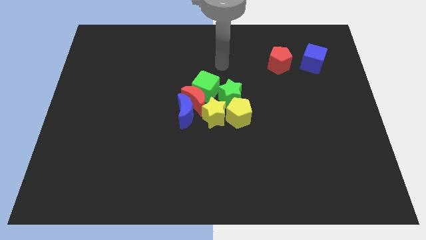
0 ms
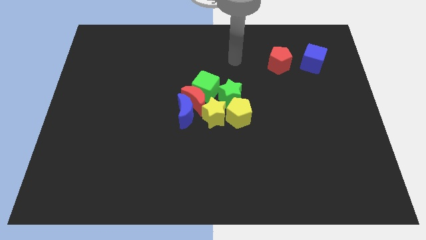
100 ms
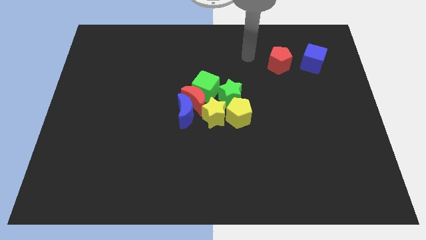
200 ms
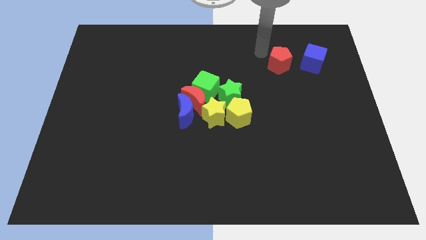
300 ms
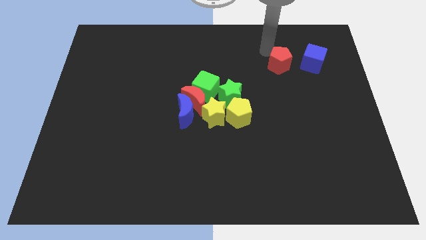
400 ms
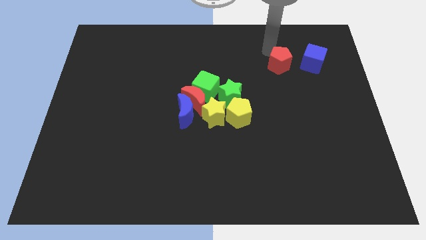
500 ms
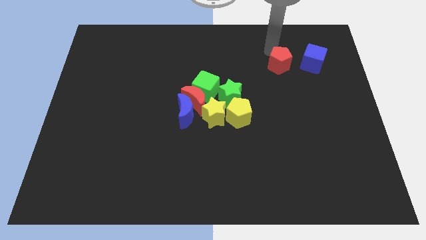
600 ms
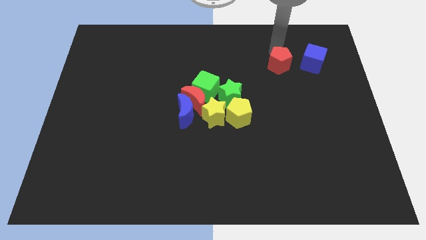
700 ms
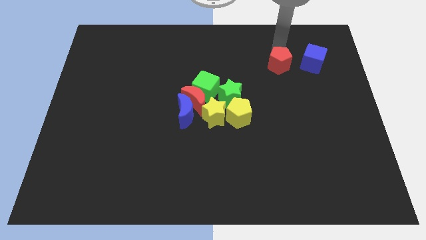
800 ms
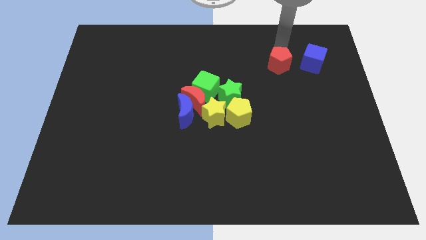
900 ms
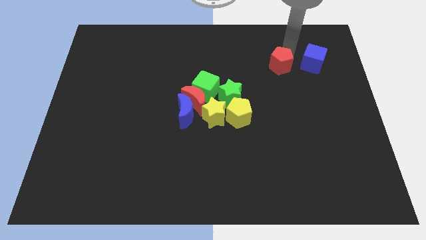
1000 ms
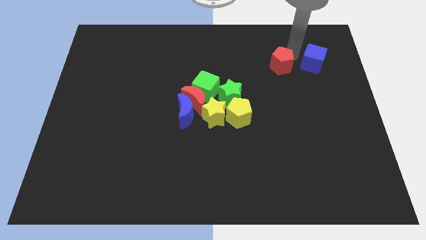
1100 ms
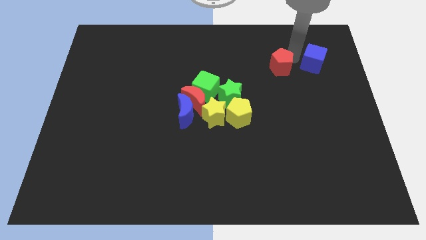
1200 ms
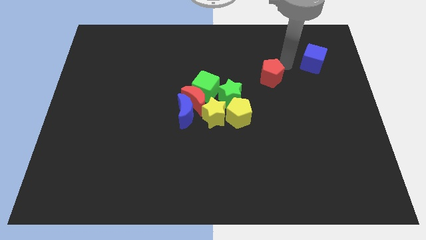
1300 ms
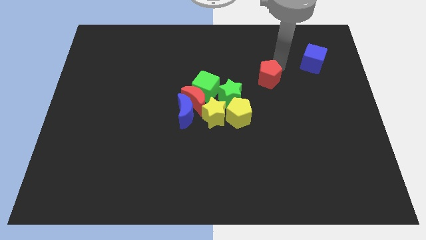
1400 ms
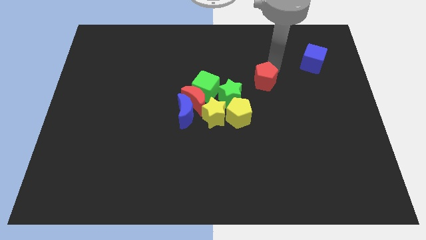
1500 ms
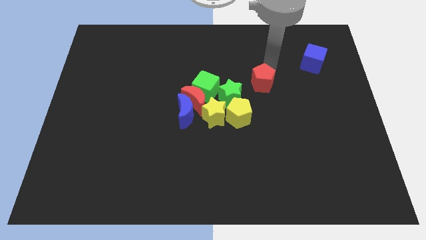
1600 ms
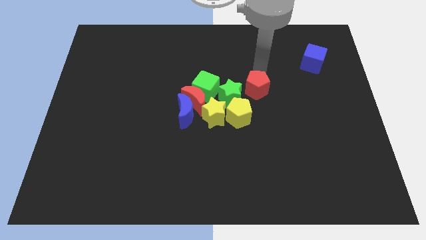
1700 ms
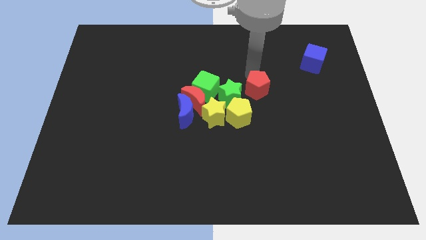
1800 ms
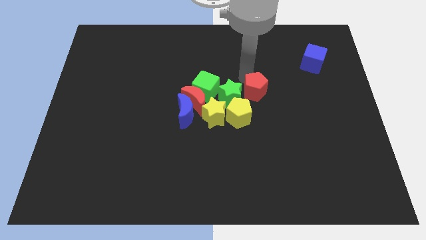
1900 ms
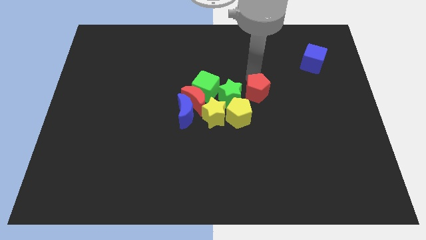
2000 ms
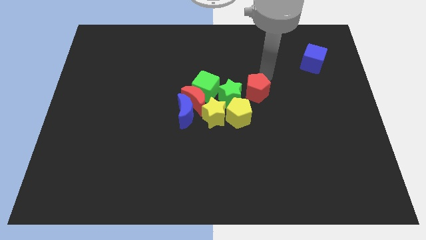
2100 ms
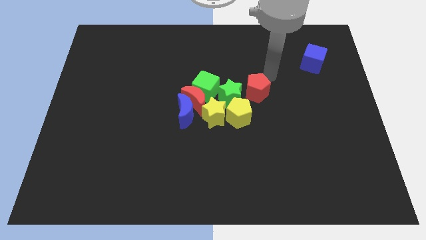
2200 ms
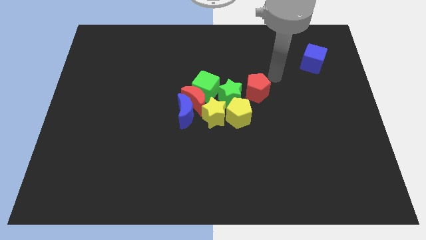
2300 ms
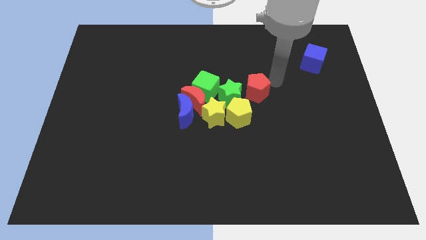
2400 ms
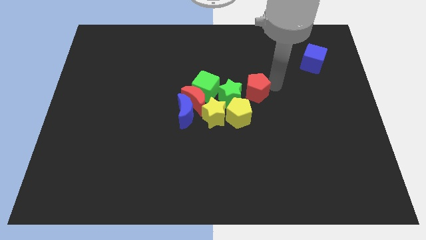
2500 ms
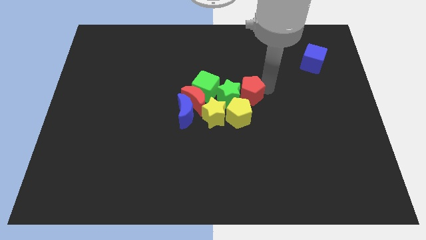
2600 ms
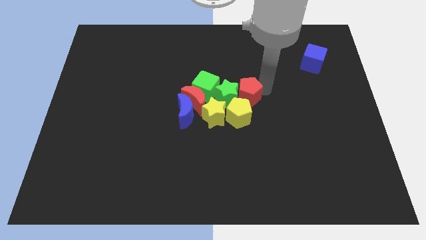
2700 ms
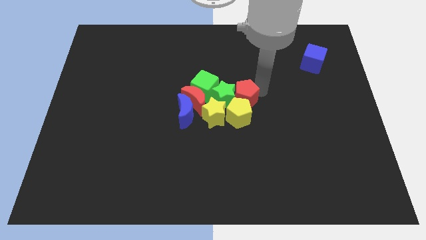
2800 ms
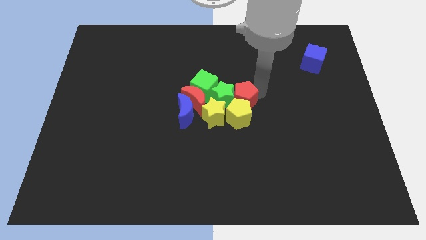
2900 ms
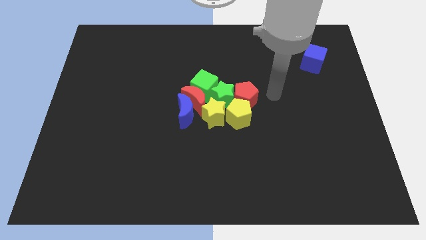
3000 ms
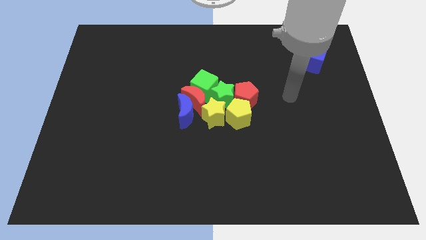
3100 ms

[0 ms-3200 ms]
move the red pentagon towards the green star

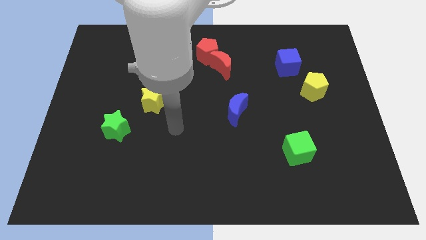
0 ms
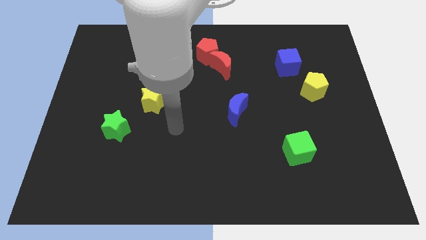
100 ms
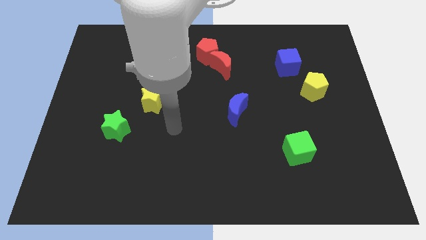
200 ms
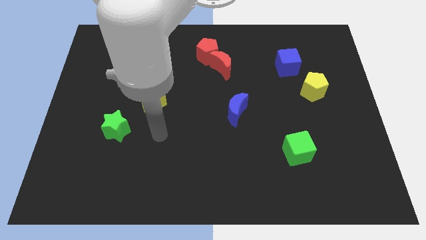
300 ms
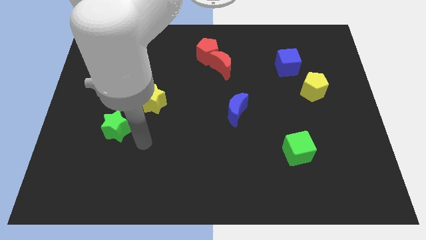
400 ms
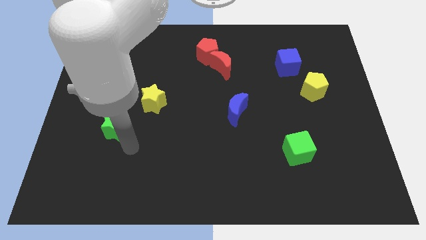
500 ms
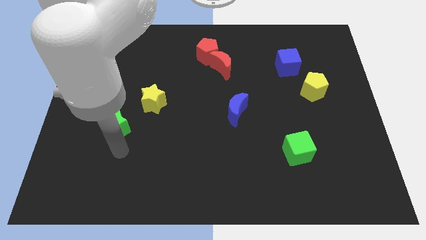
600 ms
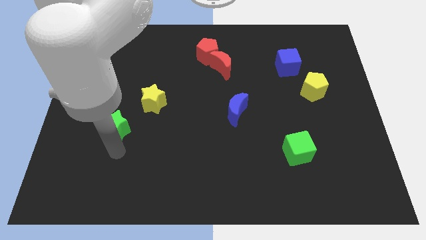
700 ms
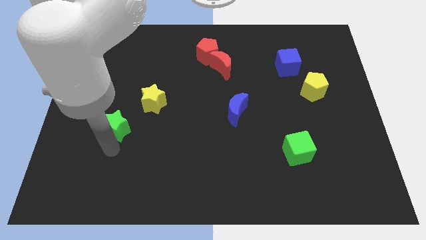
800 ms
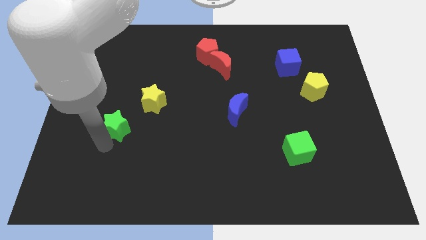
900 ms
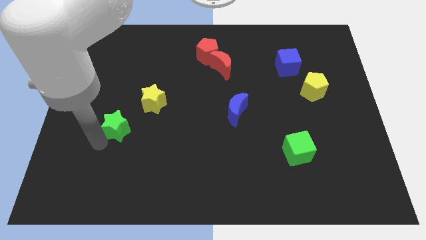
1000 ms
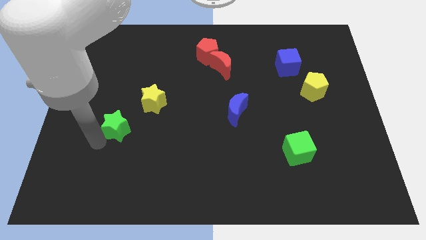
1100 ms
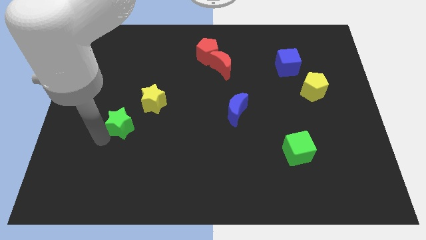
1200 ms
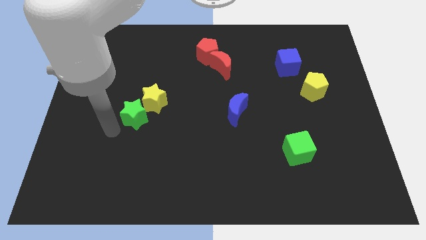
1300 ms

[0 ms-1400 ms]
slightly move the green star up

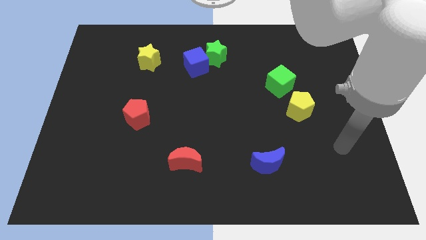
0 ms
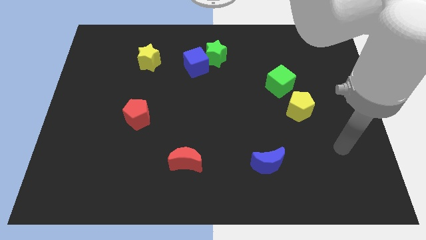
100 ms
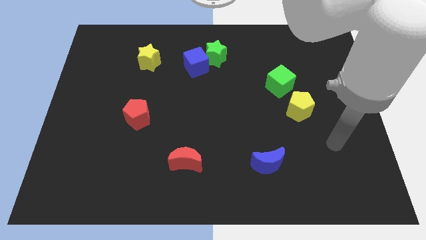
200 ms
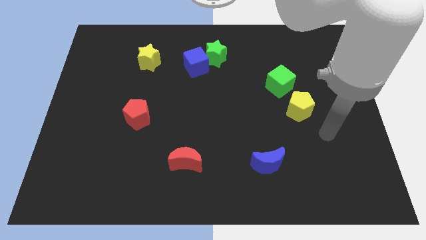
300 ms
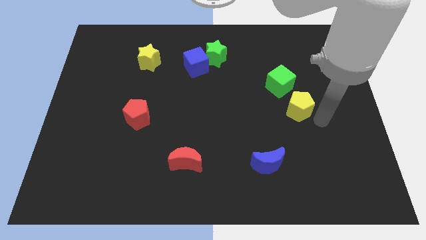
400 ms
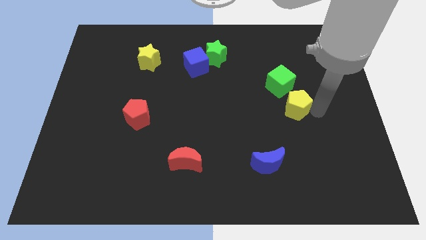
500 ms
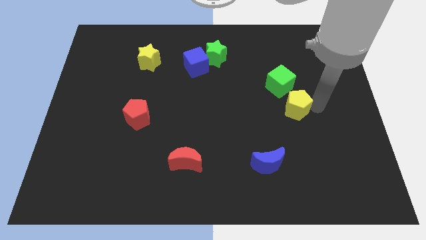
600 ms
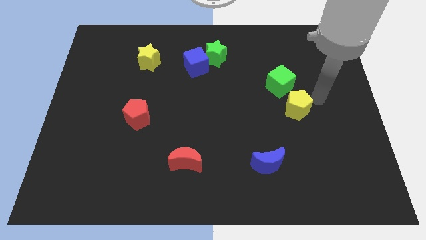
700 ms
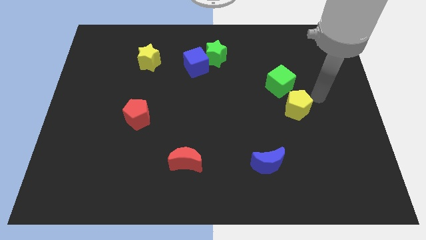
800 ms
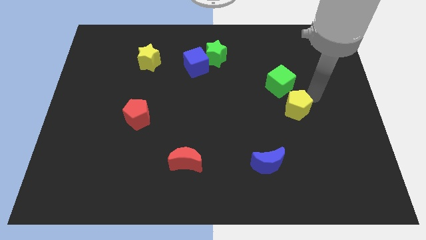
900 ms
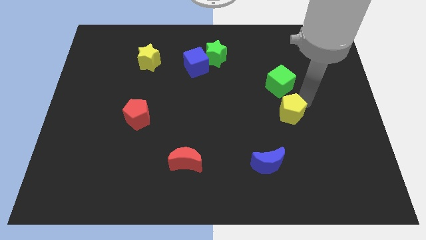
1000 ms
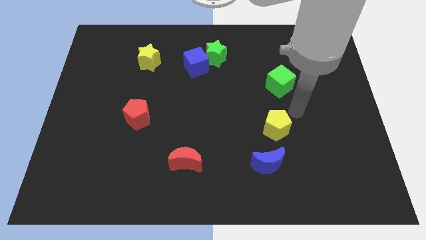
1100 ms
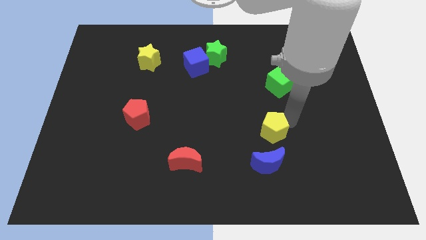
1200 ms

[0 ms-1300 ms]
put the yellow pentagon above the blue moon

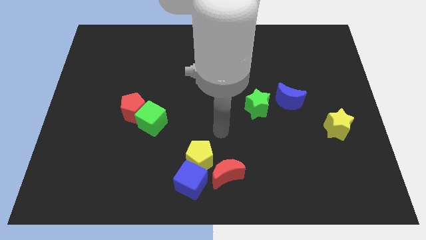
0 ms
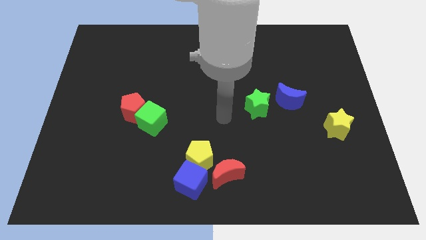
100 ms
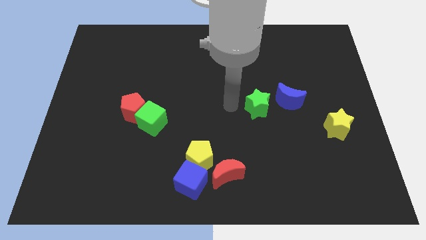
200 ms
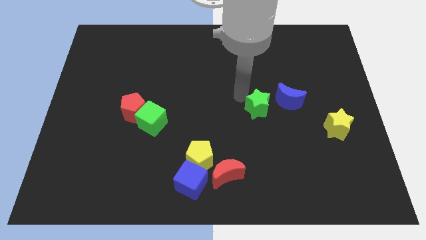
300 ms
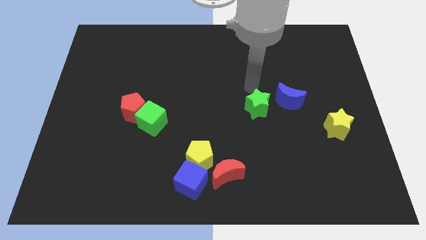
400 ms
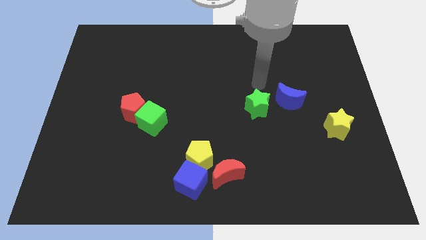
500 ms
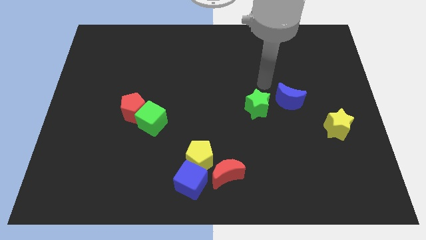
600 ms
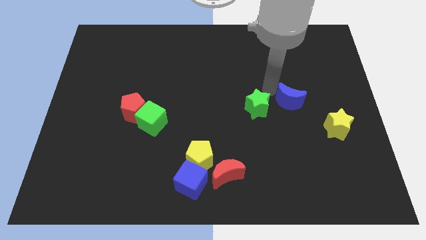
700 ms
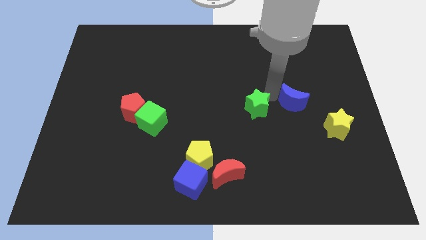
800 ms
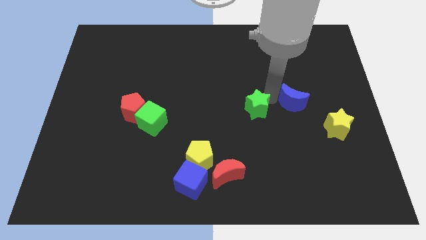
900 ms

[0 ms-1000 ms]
slightly touch left to the blue moon

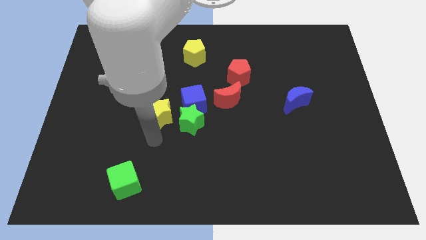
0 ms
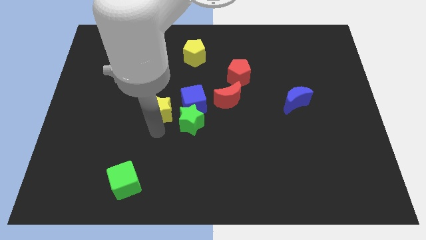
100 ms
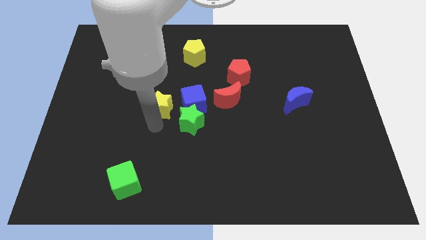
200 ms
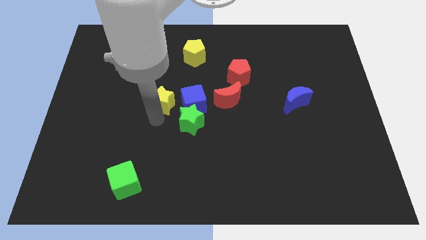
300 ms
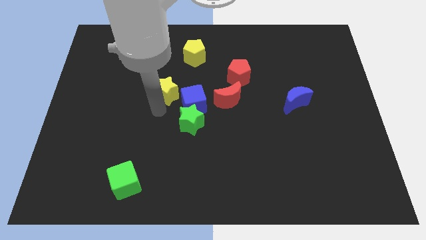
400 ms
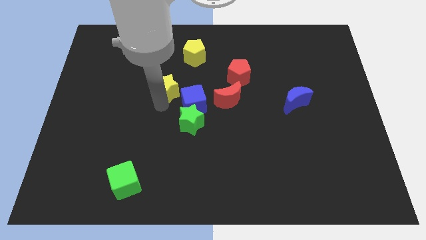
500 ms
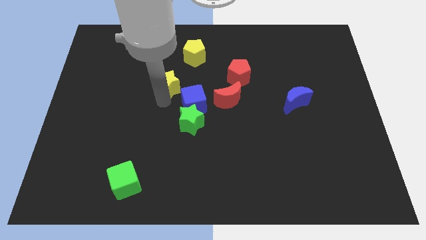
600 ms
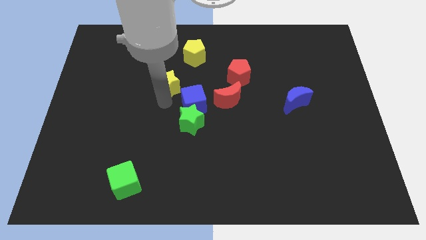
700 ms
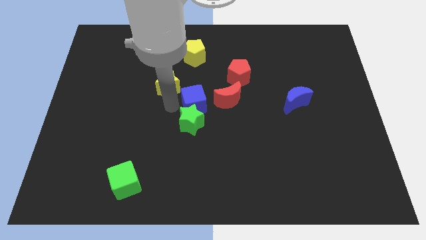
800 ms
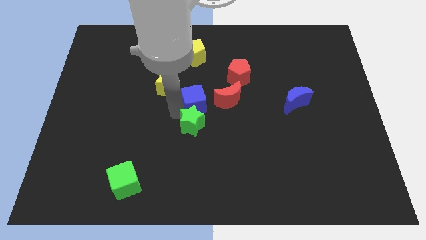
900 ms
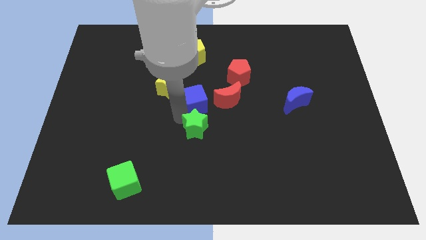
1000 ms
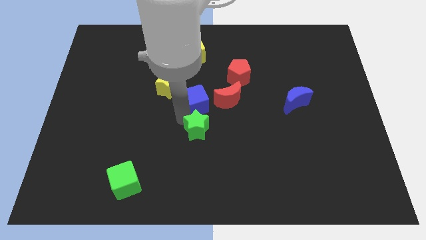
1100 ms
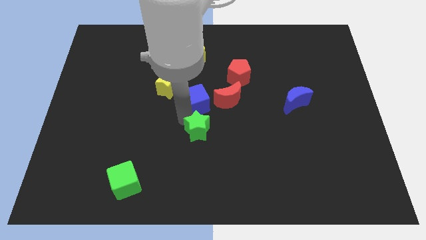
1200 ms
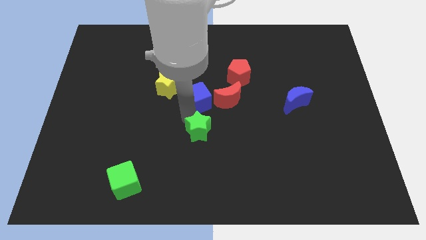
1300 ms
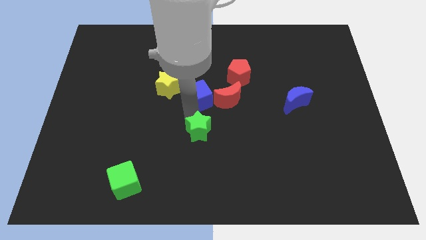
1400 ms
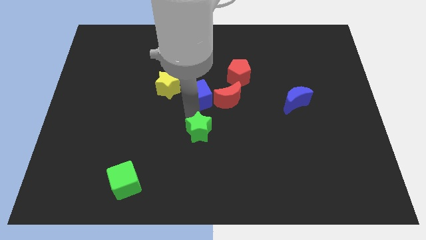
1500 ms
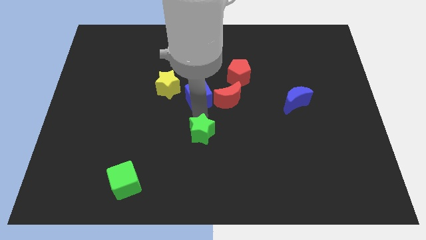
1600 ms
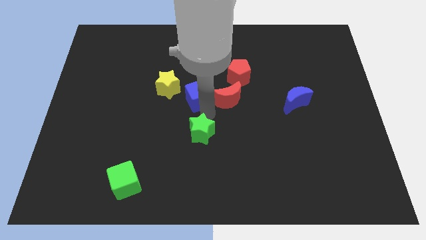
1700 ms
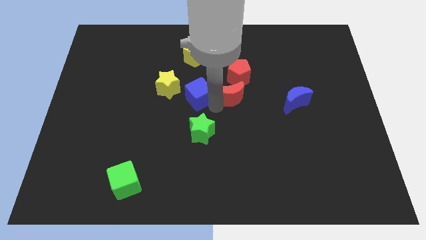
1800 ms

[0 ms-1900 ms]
separate the blue moon and green star

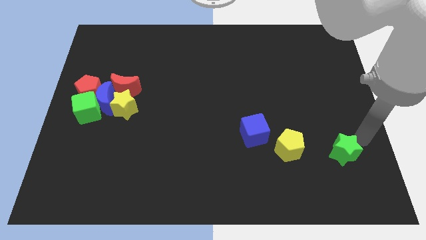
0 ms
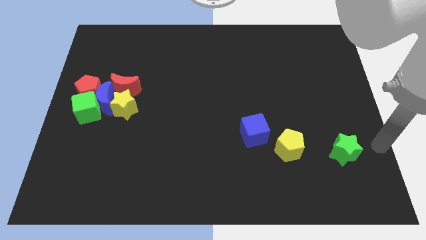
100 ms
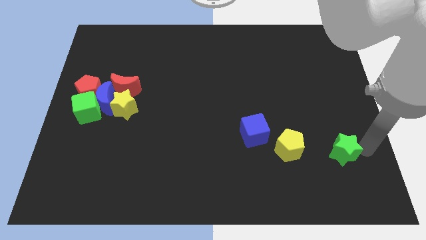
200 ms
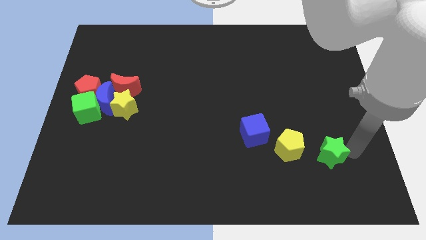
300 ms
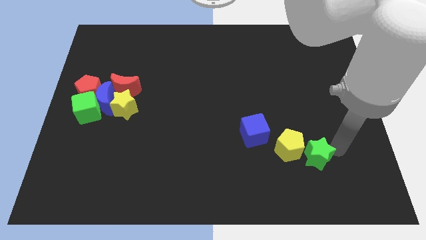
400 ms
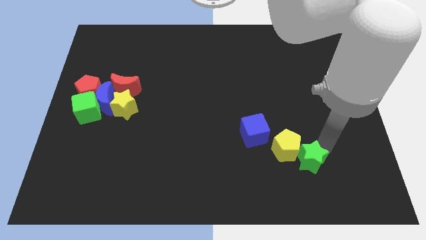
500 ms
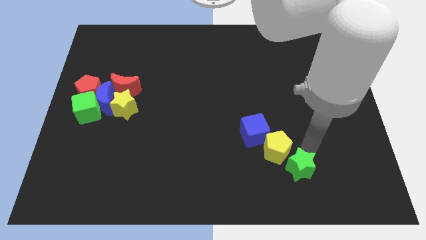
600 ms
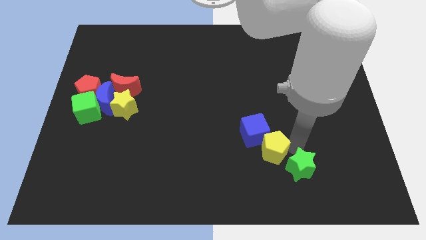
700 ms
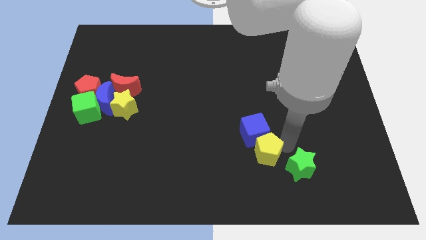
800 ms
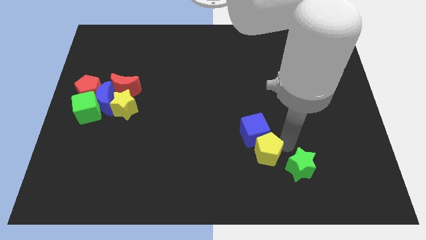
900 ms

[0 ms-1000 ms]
push the green star in to the yellow pentagon
